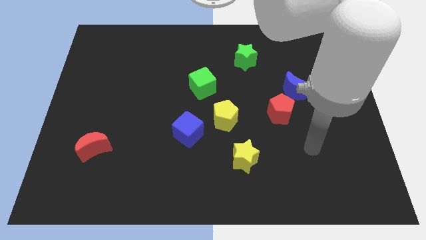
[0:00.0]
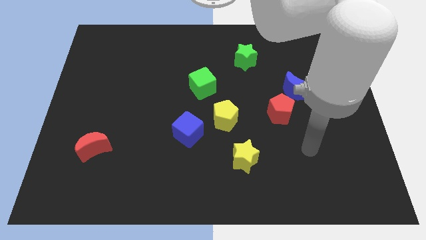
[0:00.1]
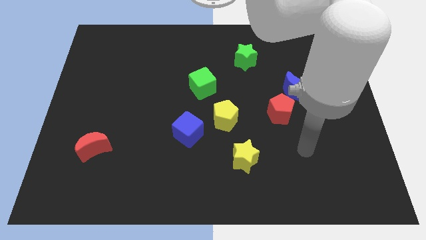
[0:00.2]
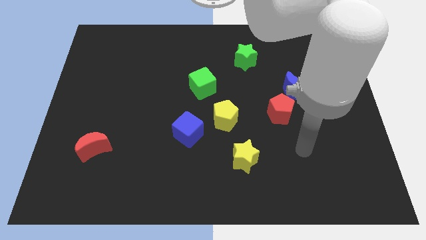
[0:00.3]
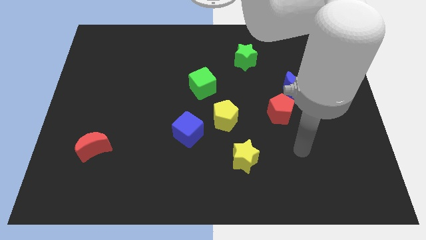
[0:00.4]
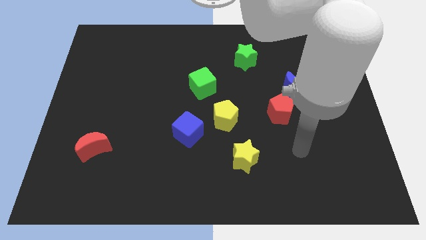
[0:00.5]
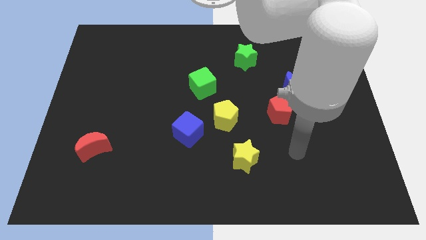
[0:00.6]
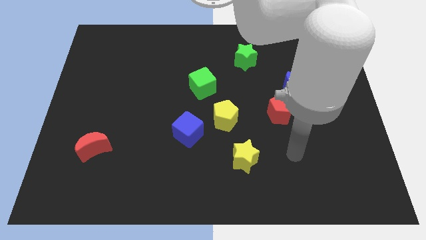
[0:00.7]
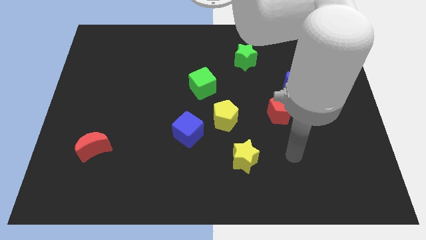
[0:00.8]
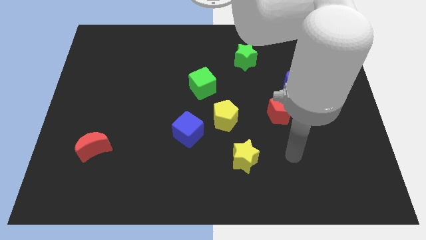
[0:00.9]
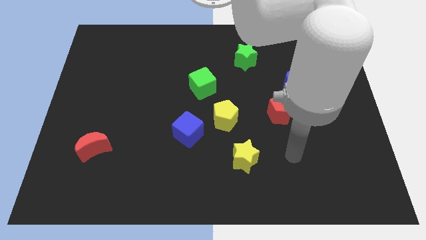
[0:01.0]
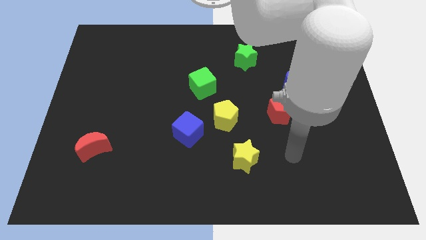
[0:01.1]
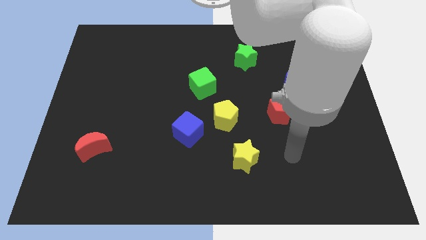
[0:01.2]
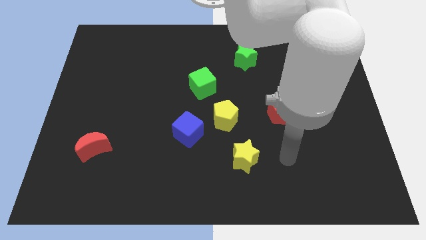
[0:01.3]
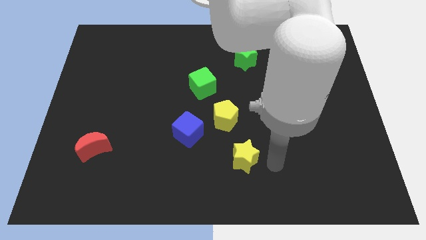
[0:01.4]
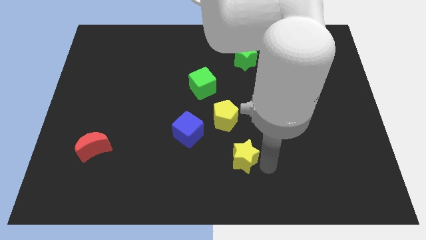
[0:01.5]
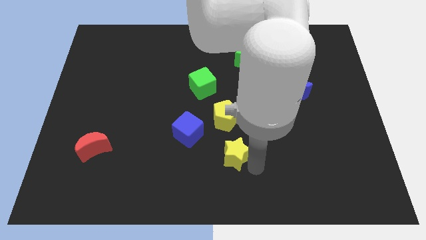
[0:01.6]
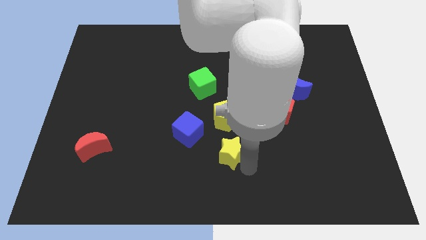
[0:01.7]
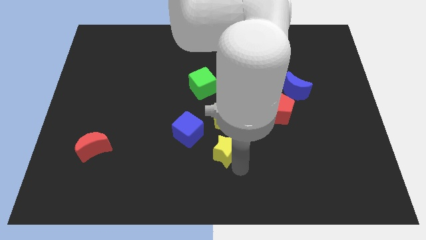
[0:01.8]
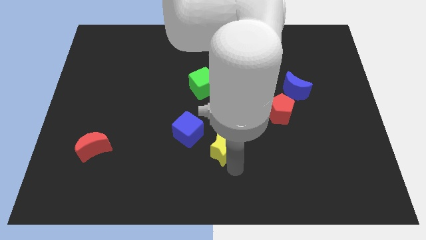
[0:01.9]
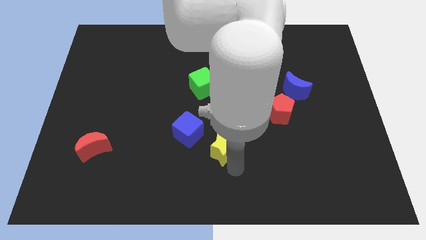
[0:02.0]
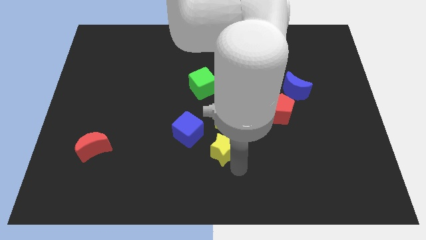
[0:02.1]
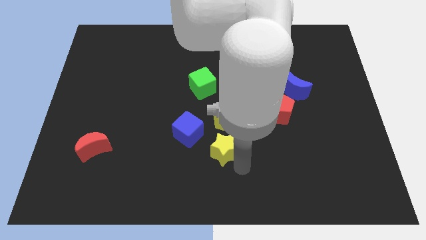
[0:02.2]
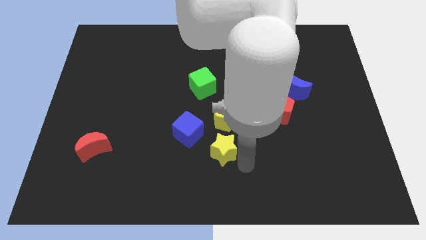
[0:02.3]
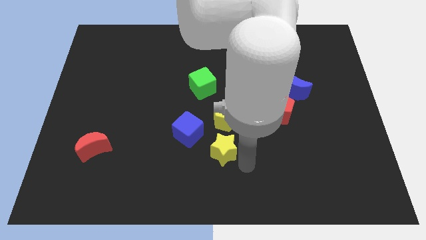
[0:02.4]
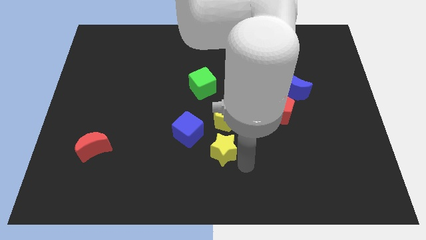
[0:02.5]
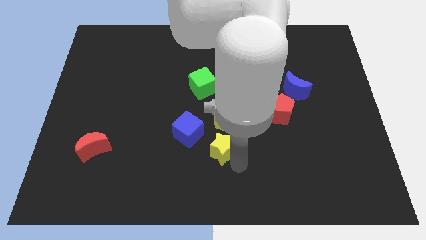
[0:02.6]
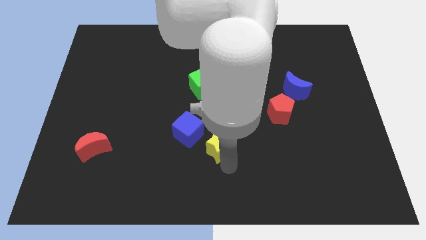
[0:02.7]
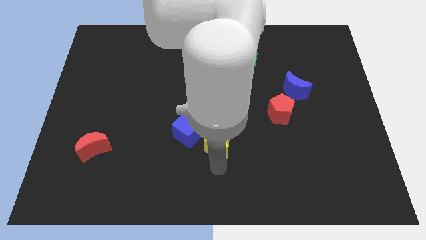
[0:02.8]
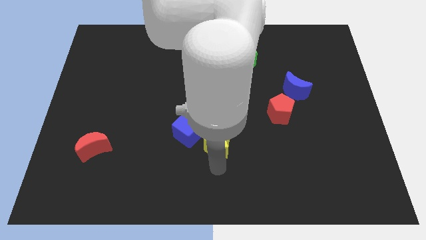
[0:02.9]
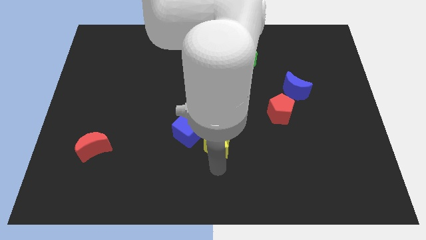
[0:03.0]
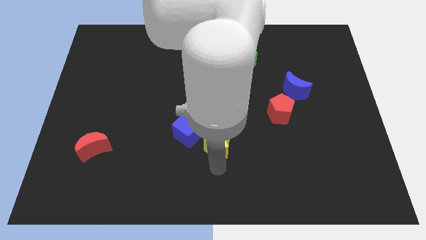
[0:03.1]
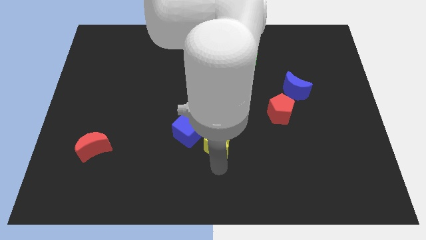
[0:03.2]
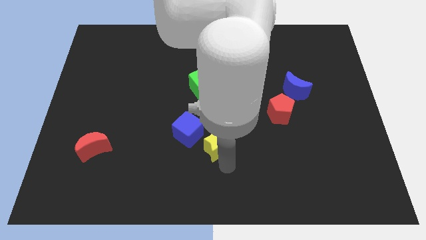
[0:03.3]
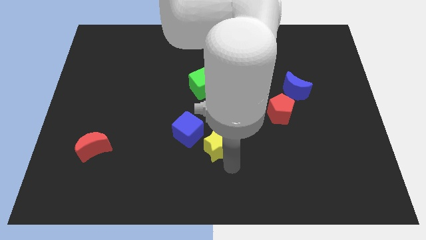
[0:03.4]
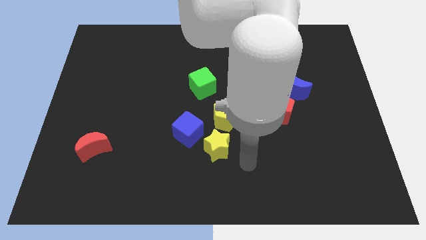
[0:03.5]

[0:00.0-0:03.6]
place the yellow star below the yellow pentagon

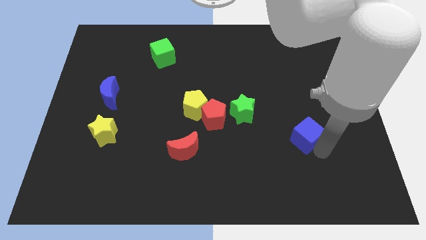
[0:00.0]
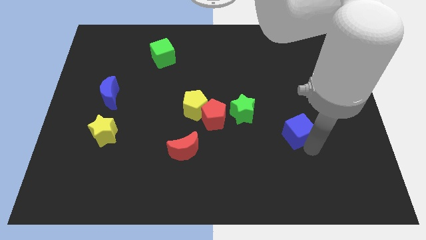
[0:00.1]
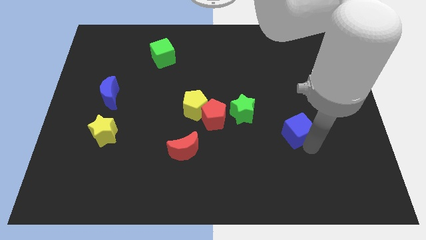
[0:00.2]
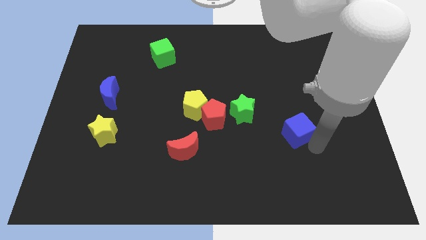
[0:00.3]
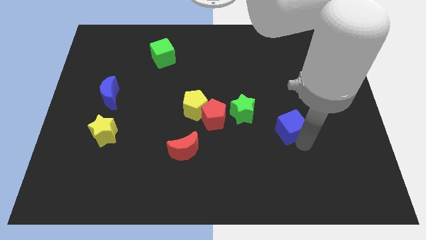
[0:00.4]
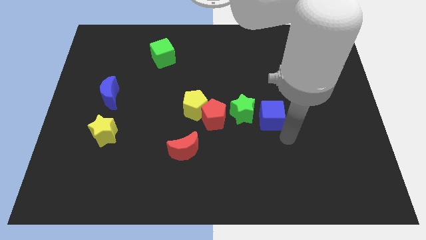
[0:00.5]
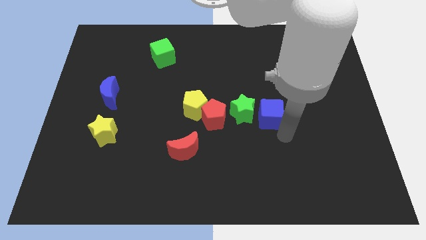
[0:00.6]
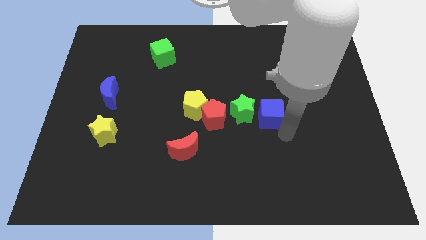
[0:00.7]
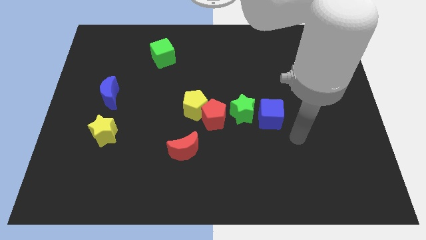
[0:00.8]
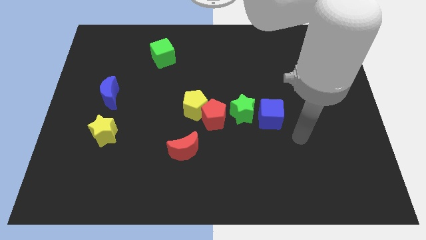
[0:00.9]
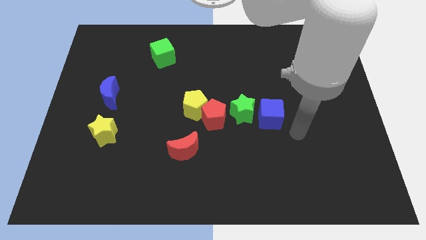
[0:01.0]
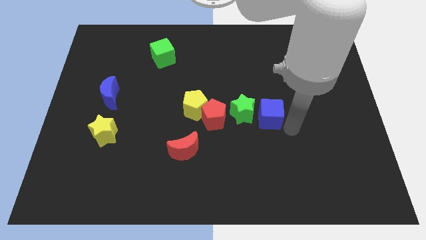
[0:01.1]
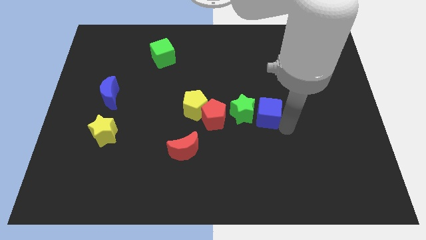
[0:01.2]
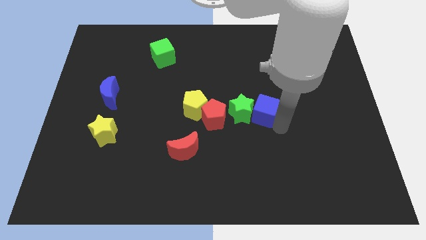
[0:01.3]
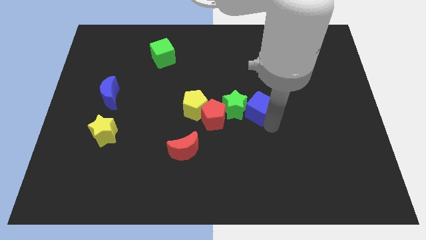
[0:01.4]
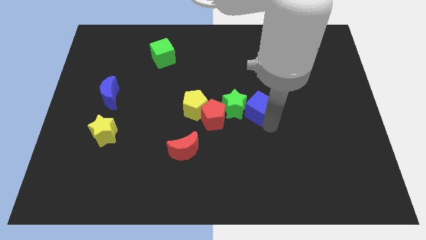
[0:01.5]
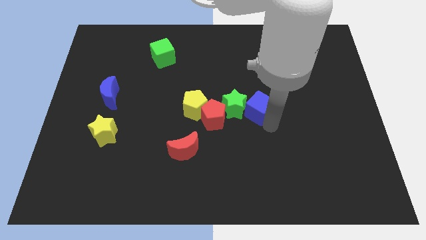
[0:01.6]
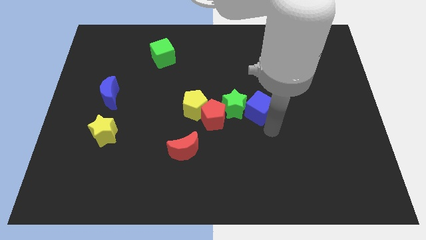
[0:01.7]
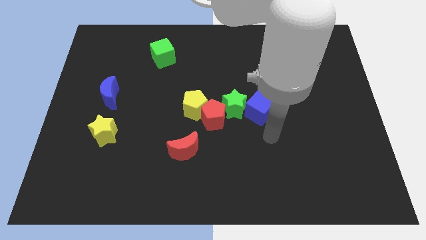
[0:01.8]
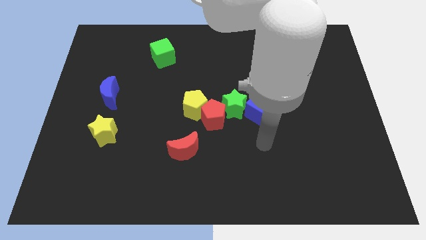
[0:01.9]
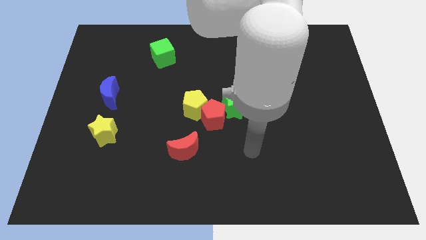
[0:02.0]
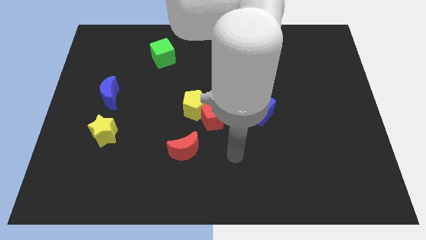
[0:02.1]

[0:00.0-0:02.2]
move the blue cube into the green star

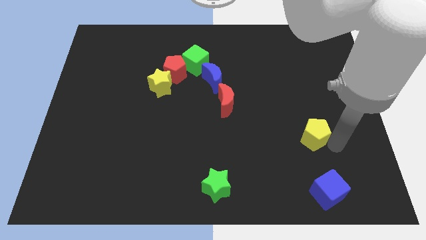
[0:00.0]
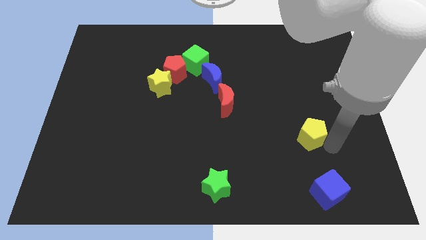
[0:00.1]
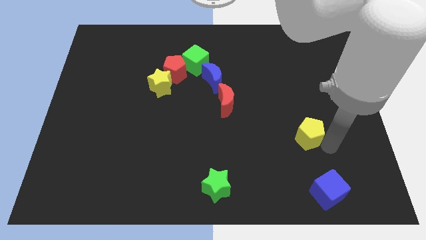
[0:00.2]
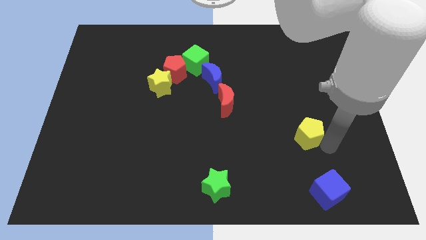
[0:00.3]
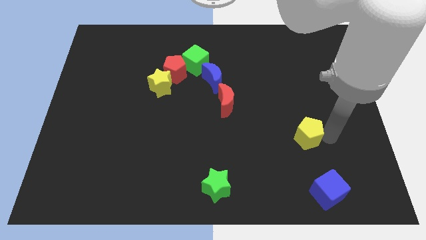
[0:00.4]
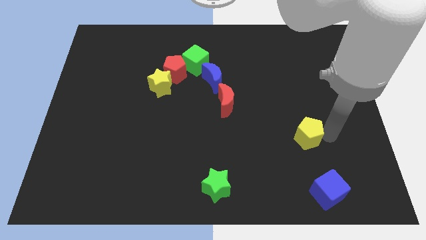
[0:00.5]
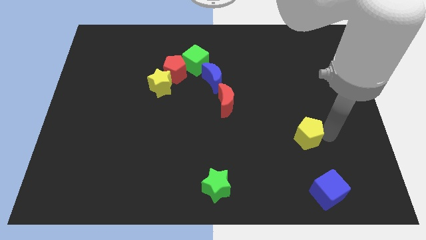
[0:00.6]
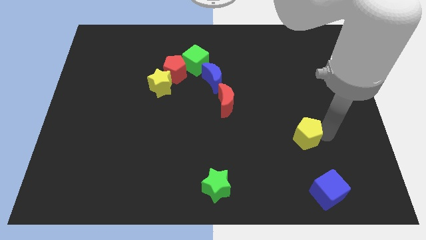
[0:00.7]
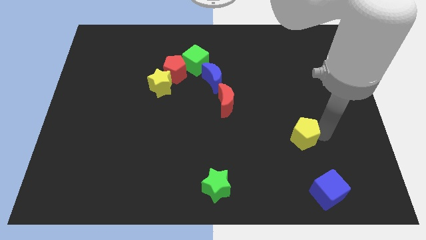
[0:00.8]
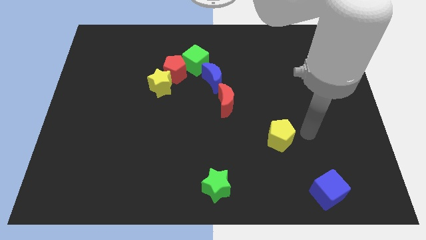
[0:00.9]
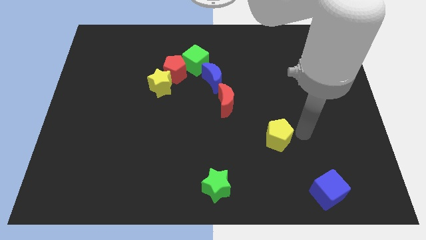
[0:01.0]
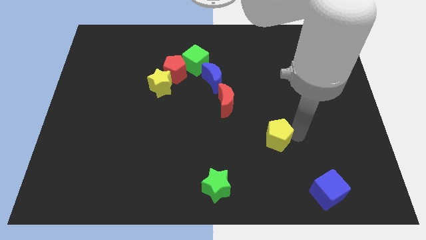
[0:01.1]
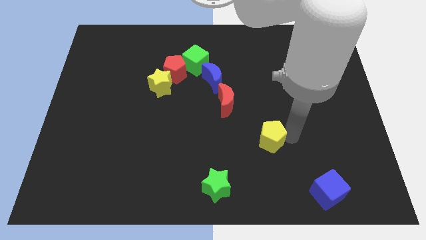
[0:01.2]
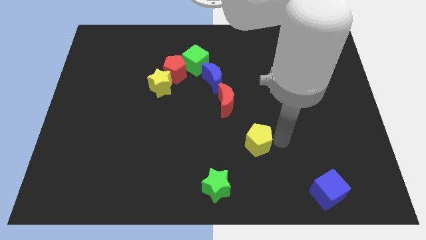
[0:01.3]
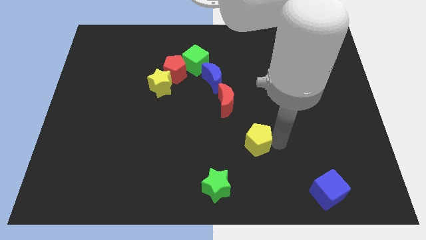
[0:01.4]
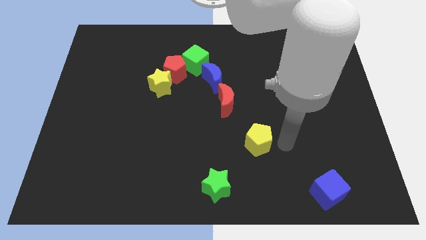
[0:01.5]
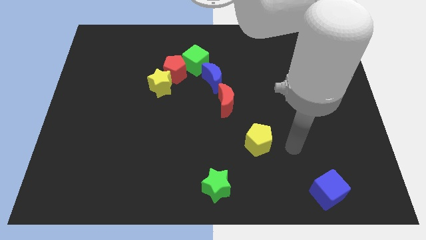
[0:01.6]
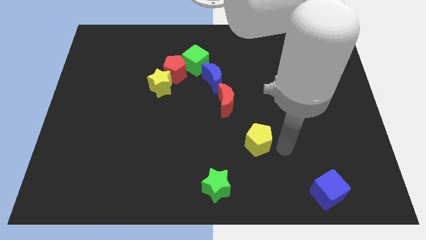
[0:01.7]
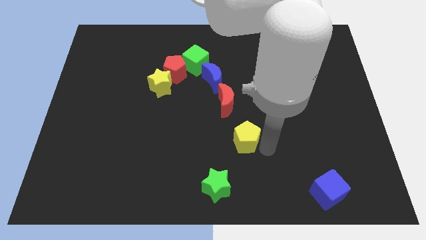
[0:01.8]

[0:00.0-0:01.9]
move the yellow pentagon diagonal to the yellow pentagon

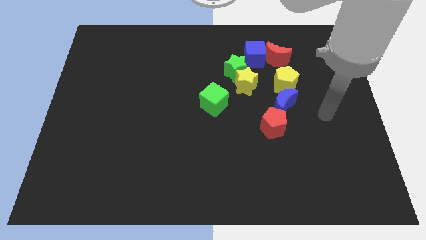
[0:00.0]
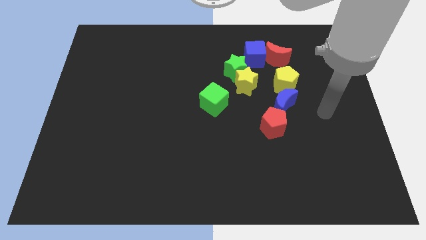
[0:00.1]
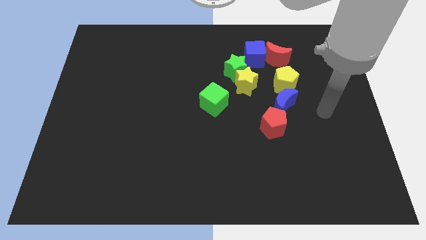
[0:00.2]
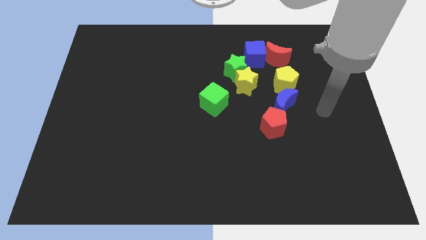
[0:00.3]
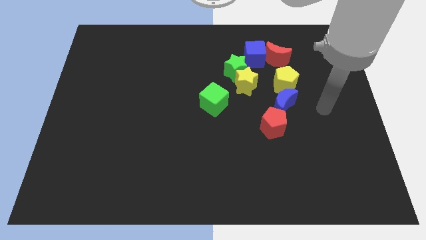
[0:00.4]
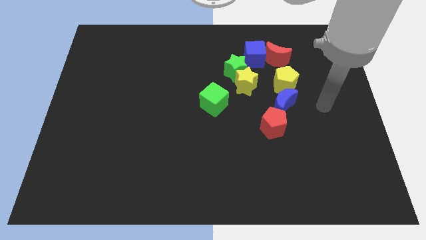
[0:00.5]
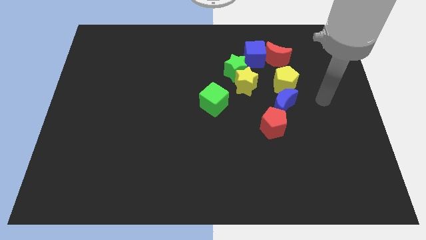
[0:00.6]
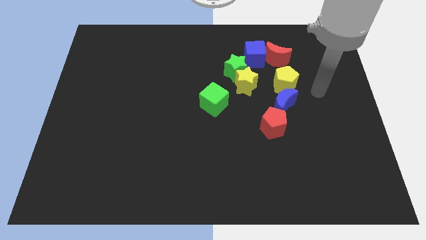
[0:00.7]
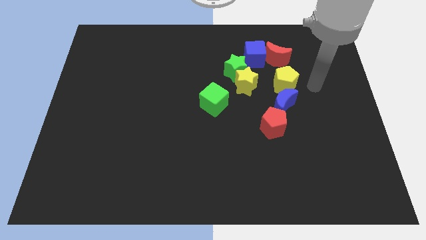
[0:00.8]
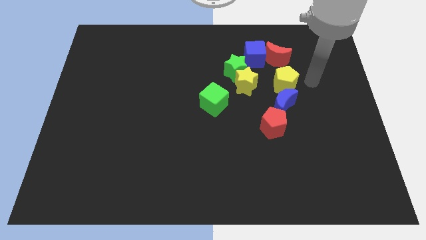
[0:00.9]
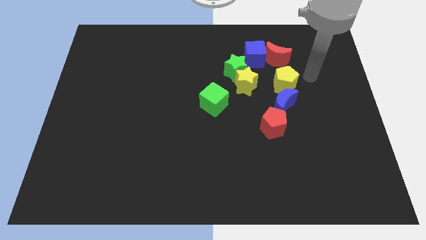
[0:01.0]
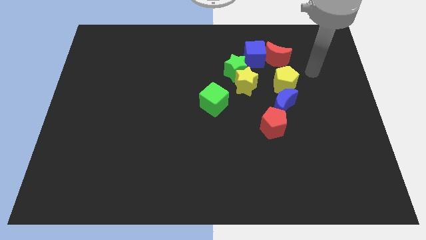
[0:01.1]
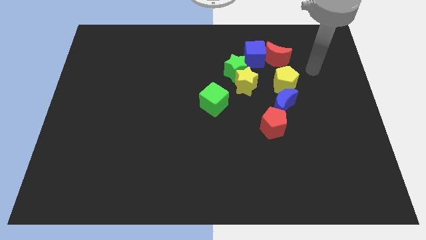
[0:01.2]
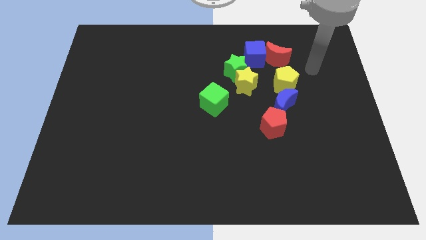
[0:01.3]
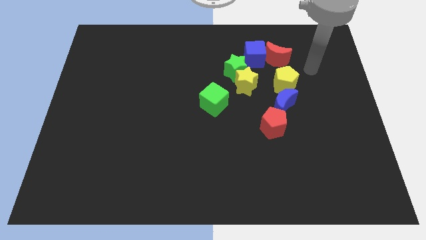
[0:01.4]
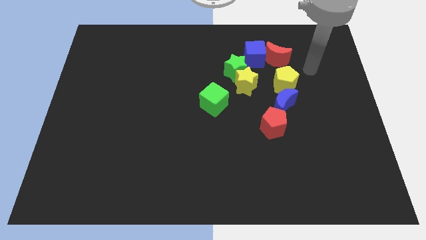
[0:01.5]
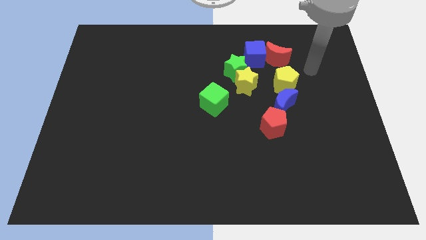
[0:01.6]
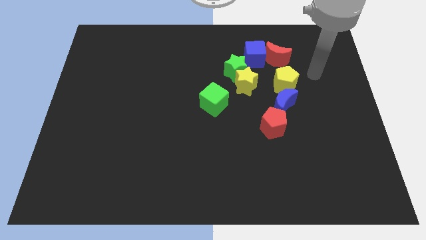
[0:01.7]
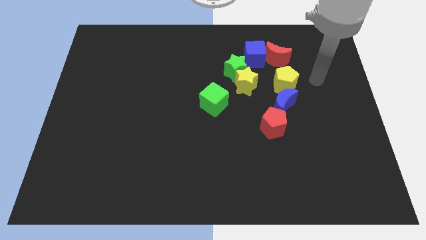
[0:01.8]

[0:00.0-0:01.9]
point the arm to the right of the yellow pentagon
